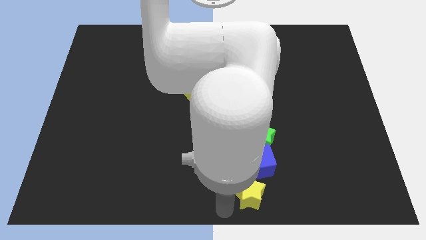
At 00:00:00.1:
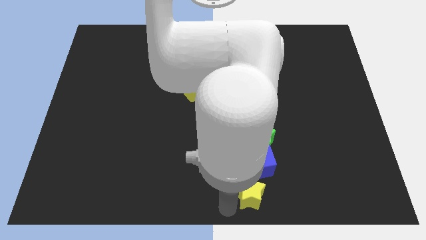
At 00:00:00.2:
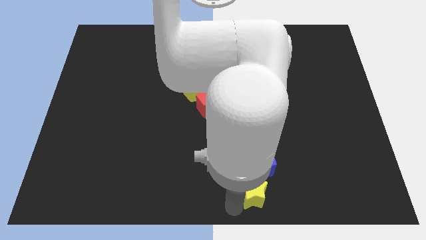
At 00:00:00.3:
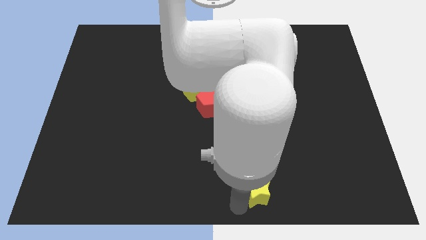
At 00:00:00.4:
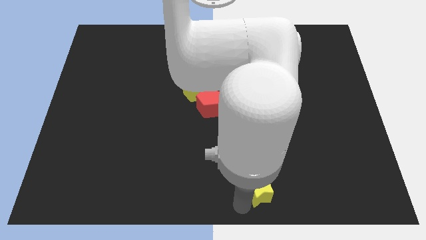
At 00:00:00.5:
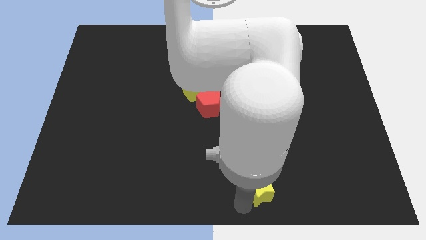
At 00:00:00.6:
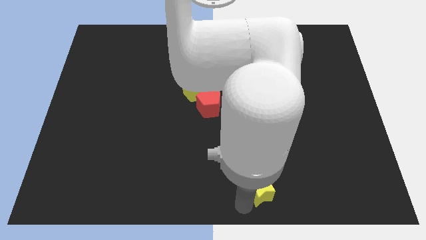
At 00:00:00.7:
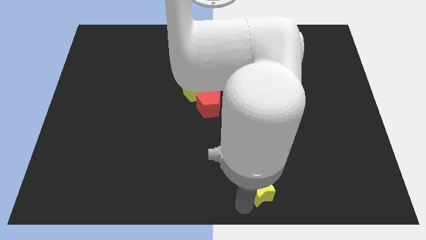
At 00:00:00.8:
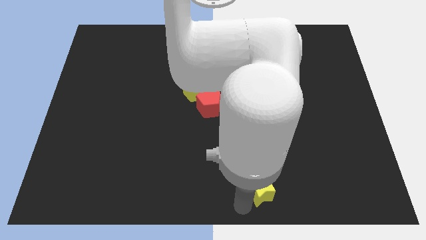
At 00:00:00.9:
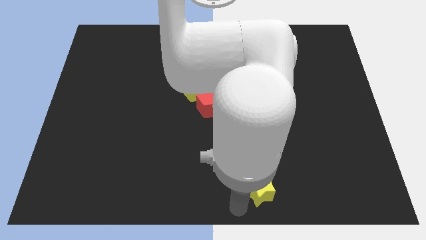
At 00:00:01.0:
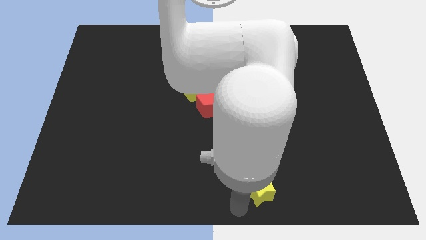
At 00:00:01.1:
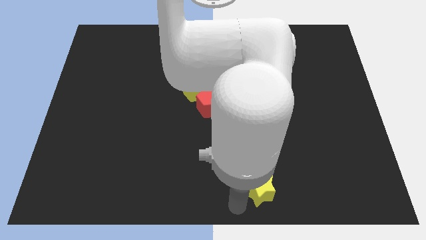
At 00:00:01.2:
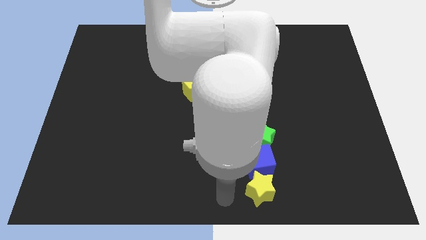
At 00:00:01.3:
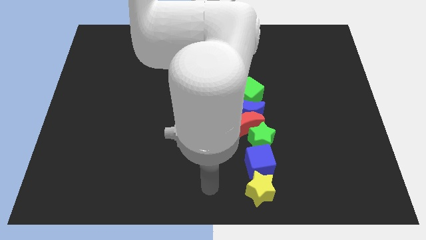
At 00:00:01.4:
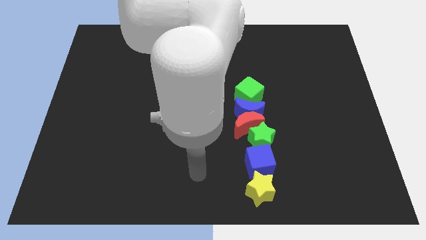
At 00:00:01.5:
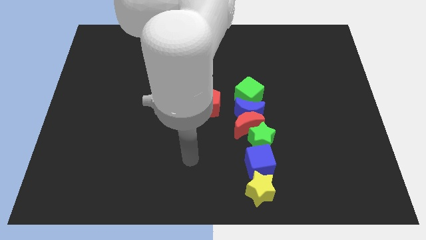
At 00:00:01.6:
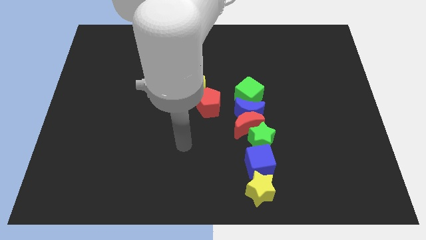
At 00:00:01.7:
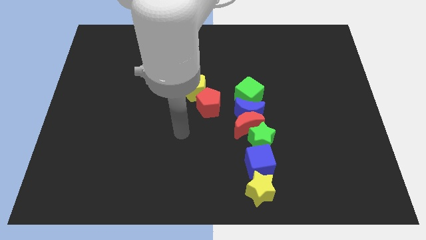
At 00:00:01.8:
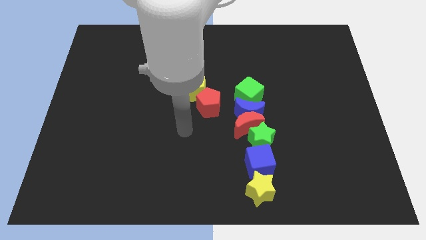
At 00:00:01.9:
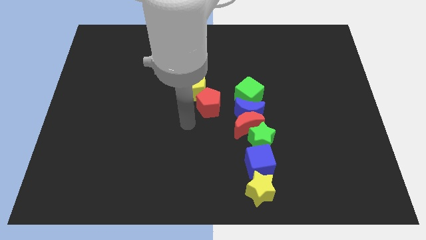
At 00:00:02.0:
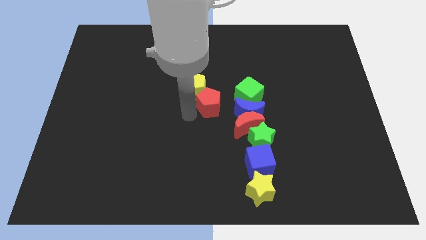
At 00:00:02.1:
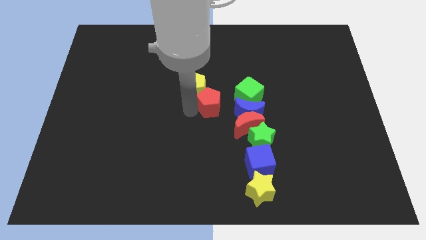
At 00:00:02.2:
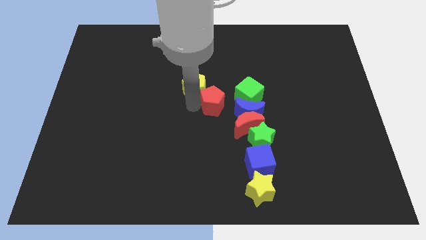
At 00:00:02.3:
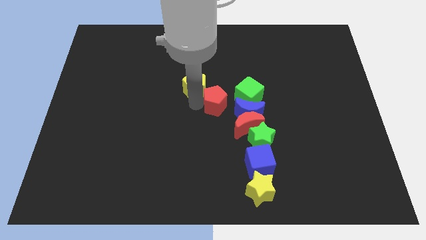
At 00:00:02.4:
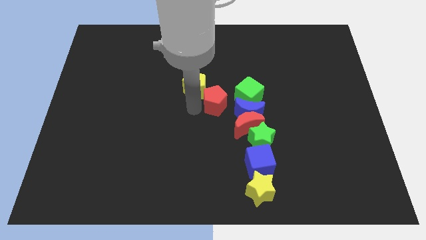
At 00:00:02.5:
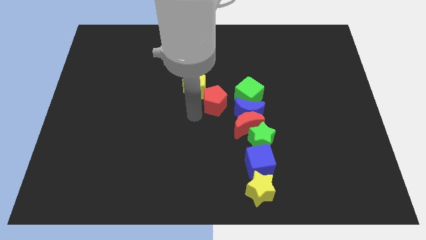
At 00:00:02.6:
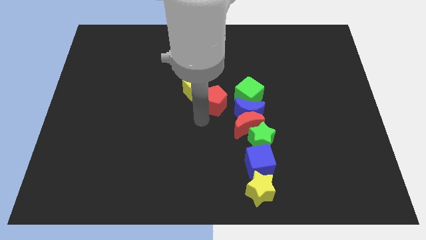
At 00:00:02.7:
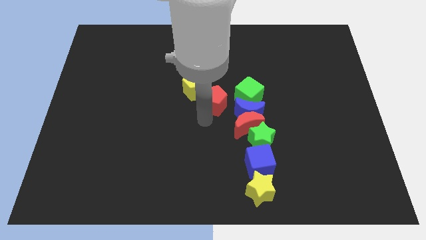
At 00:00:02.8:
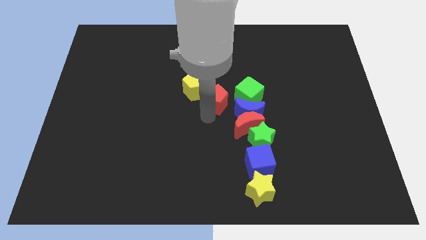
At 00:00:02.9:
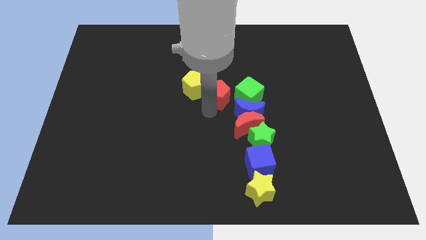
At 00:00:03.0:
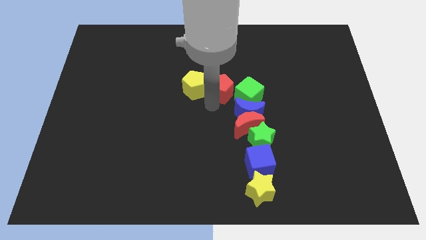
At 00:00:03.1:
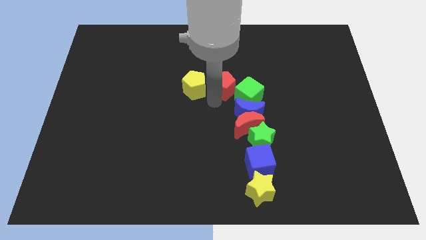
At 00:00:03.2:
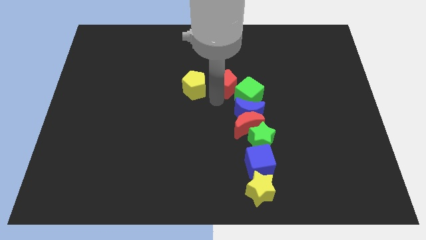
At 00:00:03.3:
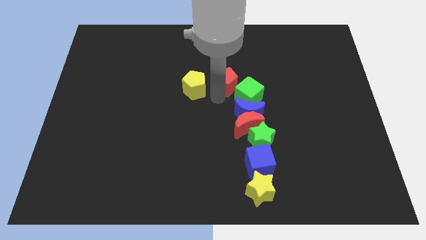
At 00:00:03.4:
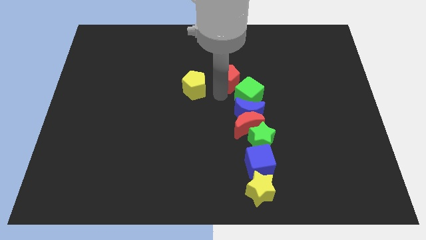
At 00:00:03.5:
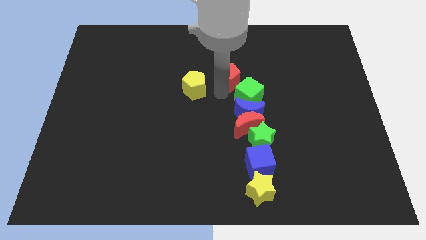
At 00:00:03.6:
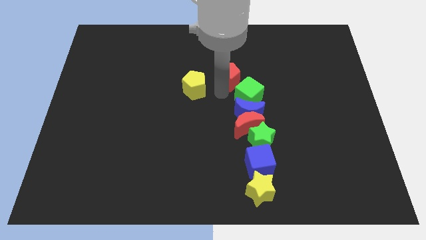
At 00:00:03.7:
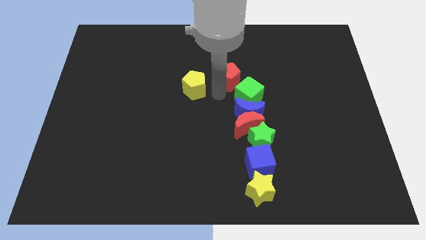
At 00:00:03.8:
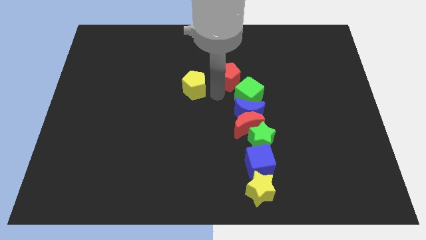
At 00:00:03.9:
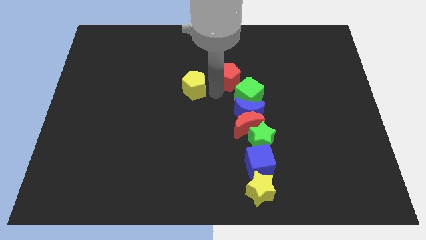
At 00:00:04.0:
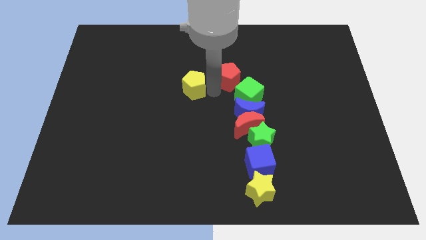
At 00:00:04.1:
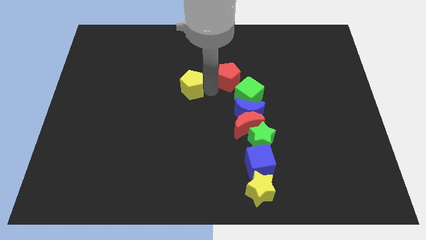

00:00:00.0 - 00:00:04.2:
move the red pentagon towards the green cube

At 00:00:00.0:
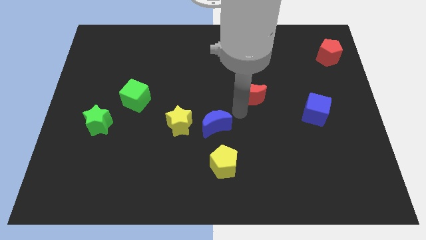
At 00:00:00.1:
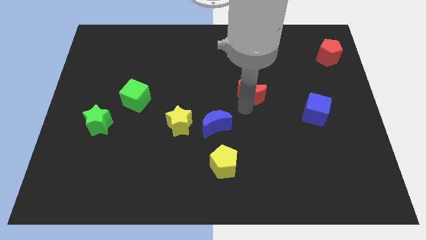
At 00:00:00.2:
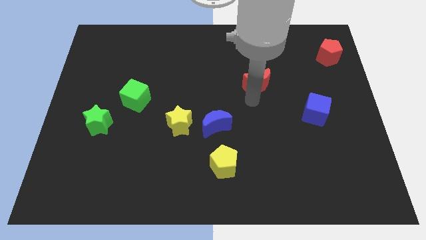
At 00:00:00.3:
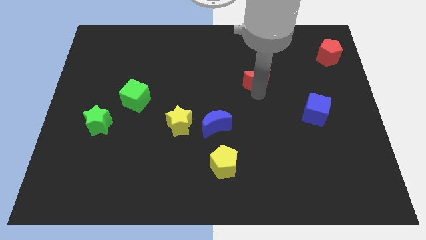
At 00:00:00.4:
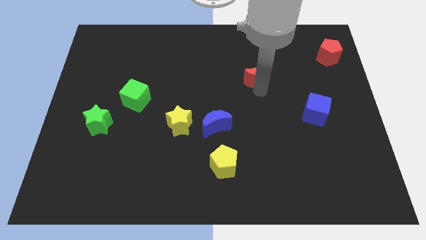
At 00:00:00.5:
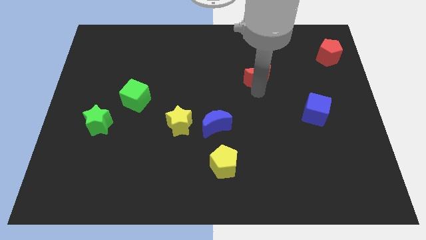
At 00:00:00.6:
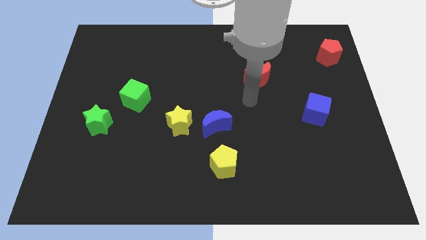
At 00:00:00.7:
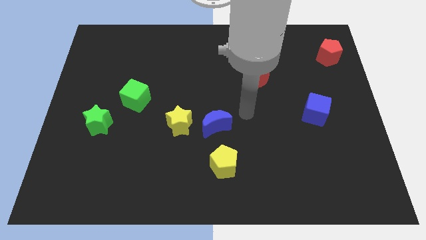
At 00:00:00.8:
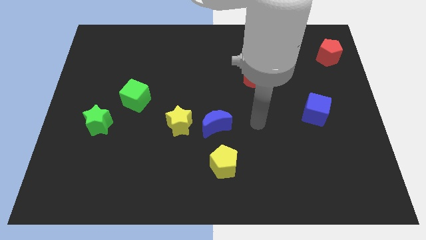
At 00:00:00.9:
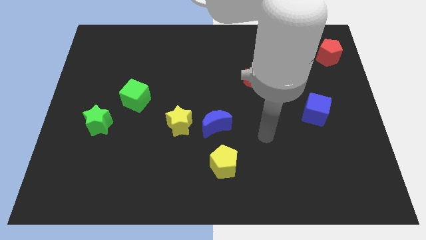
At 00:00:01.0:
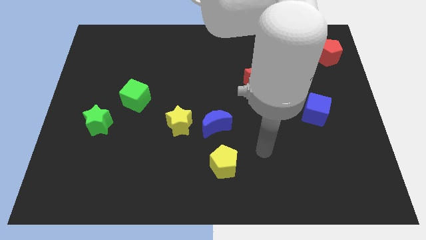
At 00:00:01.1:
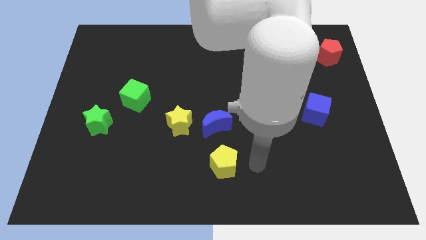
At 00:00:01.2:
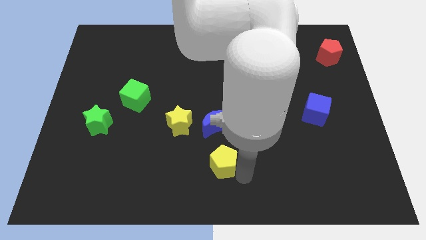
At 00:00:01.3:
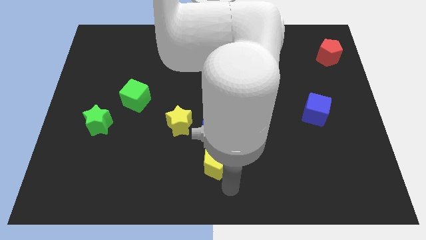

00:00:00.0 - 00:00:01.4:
place your arm below yellow pentagon

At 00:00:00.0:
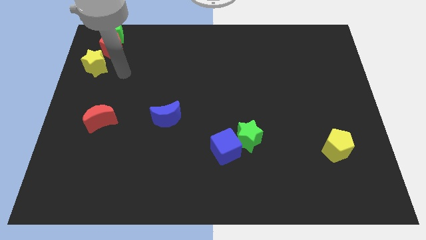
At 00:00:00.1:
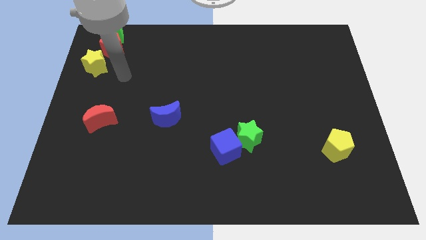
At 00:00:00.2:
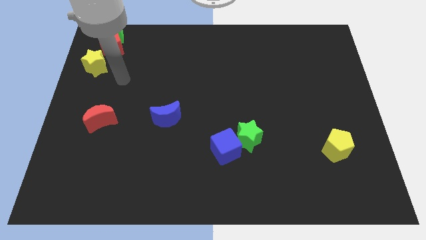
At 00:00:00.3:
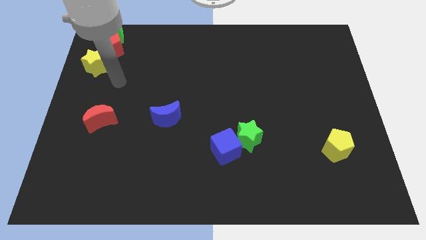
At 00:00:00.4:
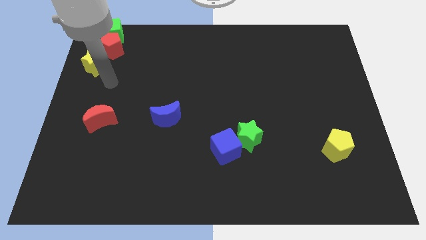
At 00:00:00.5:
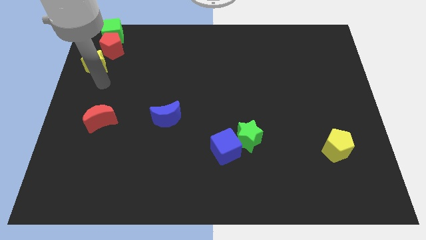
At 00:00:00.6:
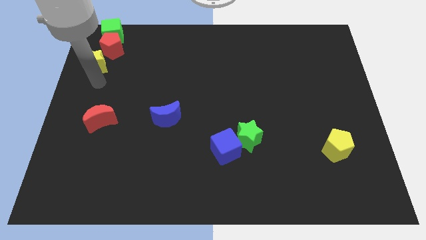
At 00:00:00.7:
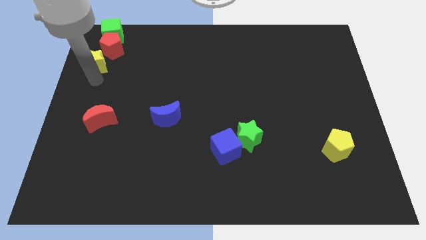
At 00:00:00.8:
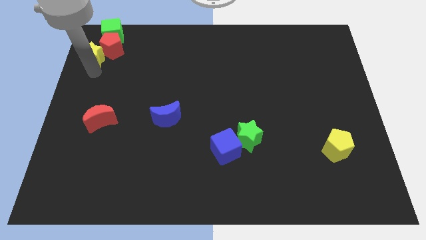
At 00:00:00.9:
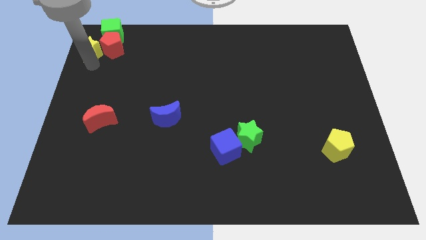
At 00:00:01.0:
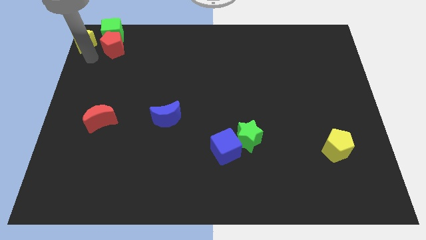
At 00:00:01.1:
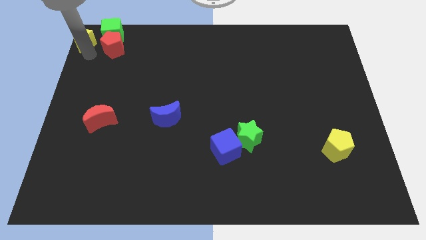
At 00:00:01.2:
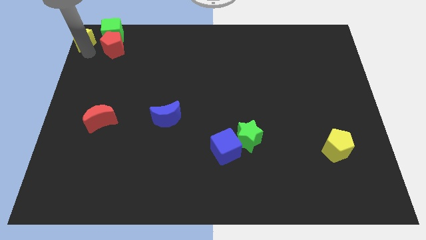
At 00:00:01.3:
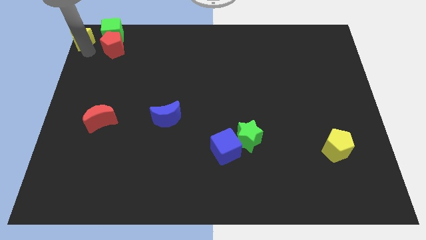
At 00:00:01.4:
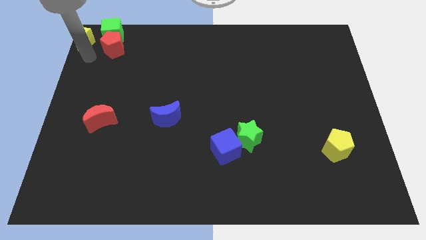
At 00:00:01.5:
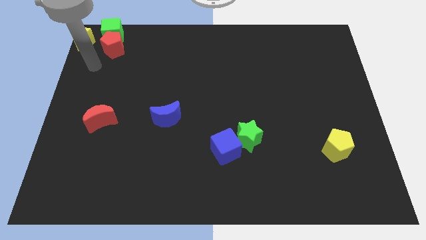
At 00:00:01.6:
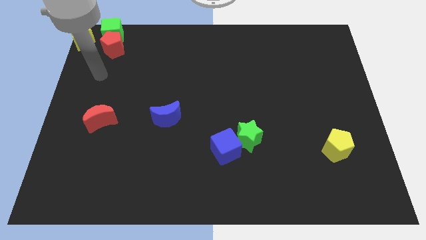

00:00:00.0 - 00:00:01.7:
move the yellow star towards the top left corner of the board

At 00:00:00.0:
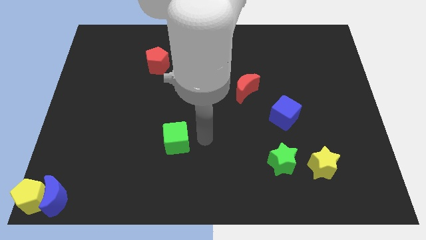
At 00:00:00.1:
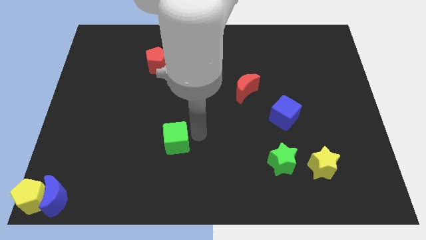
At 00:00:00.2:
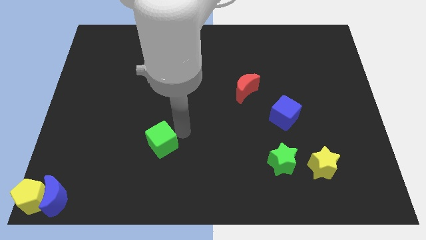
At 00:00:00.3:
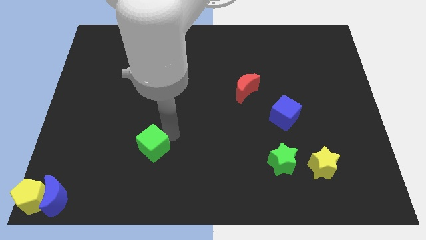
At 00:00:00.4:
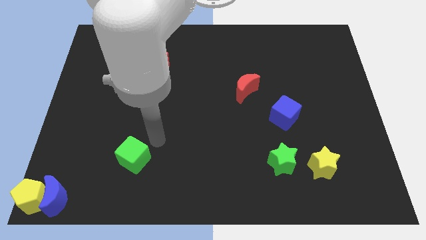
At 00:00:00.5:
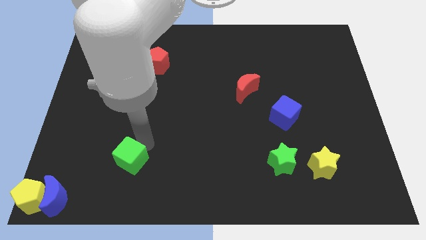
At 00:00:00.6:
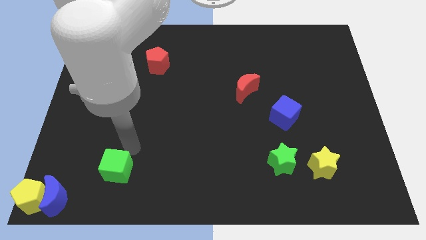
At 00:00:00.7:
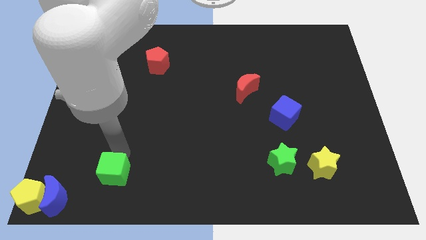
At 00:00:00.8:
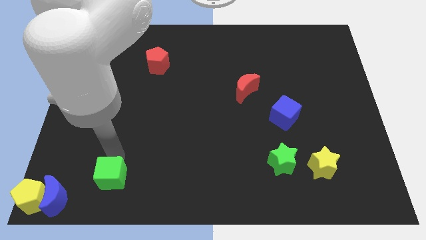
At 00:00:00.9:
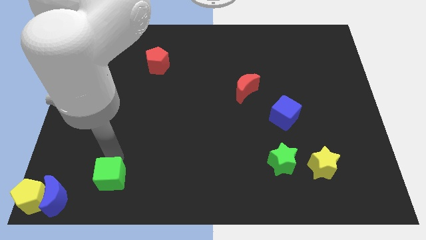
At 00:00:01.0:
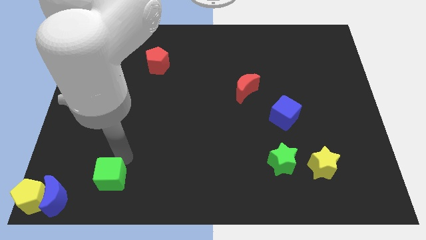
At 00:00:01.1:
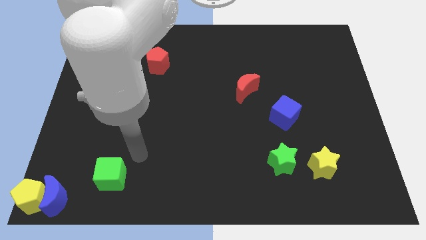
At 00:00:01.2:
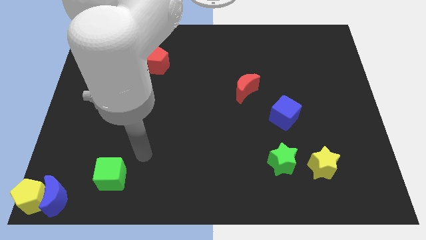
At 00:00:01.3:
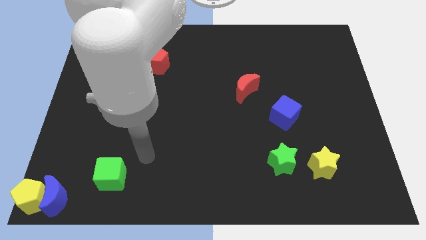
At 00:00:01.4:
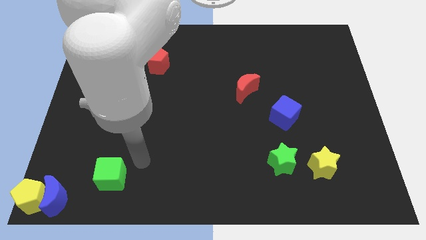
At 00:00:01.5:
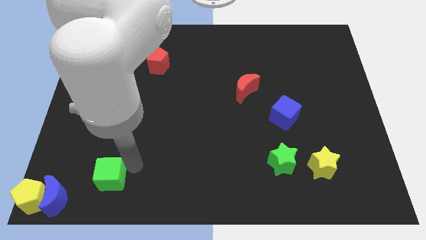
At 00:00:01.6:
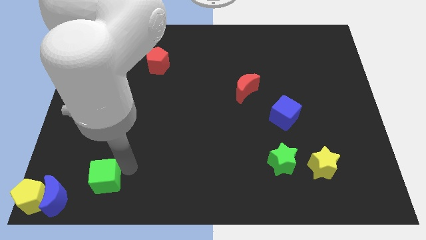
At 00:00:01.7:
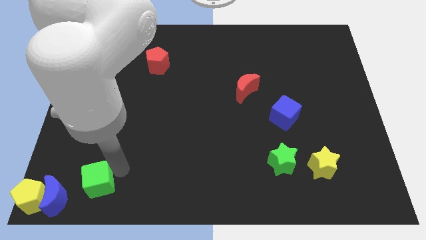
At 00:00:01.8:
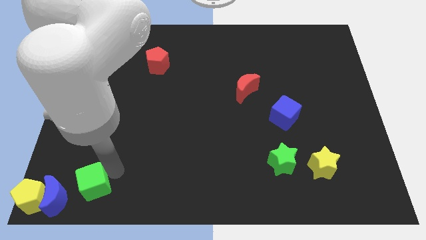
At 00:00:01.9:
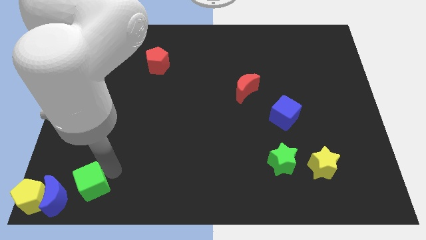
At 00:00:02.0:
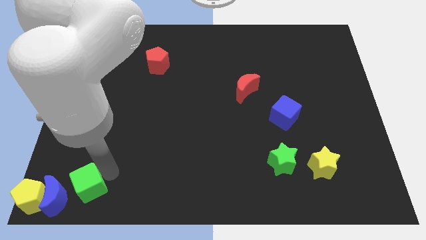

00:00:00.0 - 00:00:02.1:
move green cube towards blue moon
